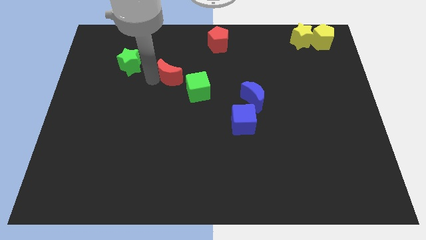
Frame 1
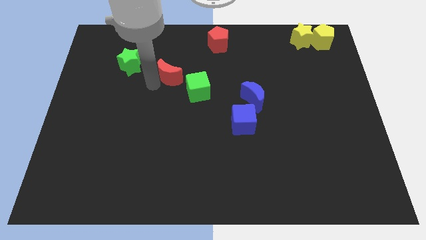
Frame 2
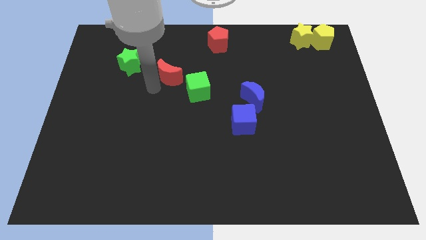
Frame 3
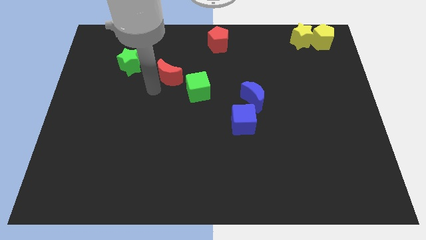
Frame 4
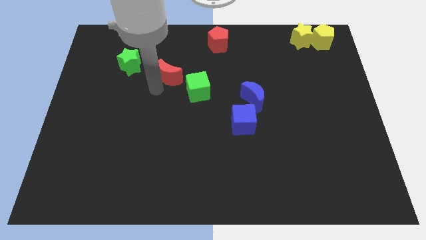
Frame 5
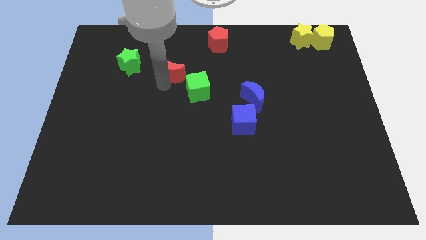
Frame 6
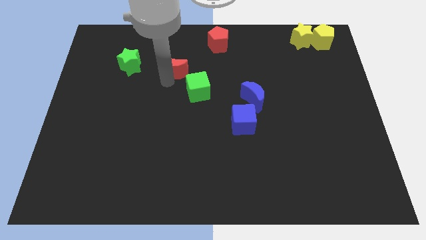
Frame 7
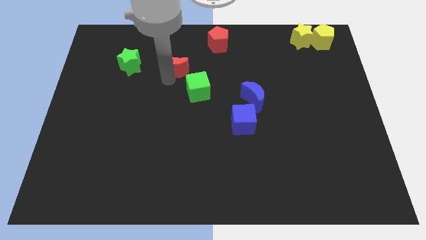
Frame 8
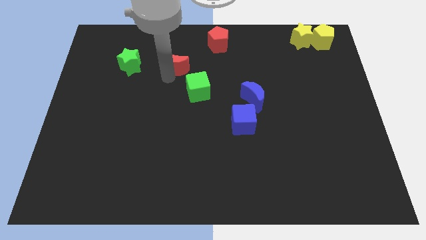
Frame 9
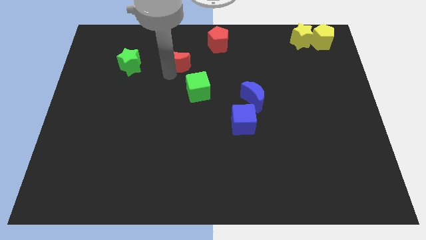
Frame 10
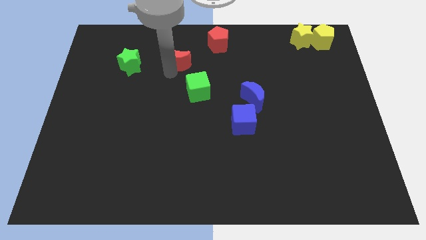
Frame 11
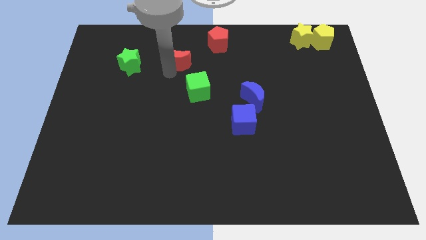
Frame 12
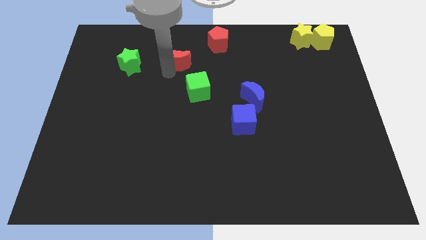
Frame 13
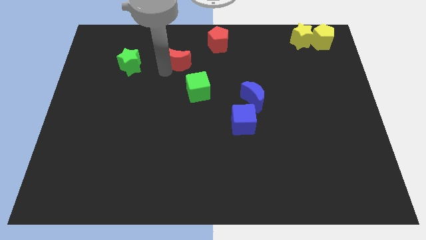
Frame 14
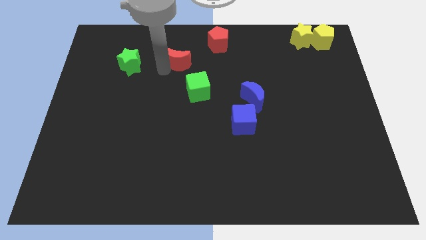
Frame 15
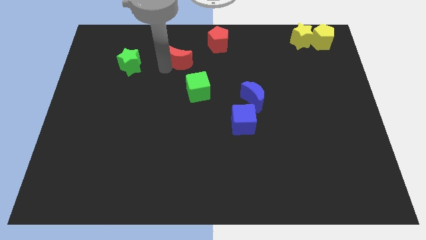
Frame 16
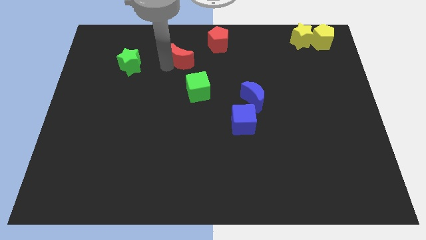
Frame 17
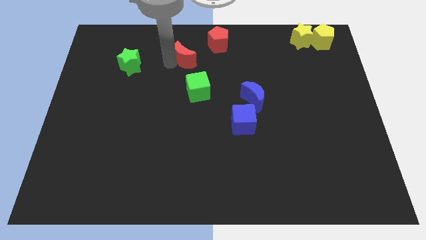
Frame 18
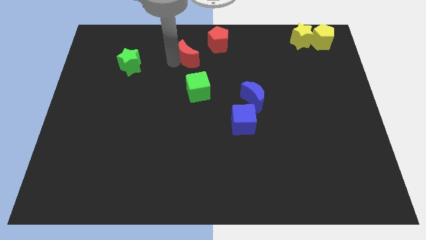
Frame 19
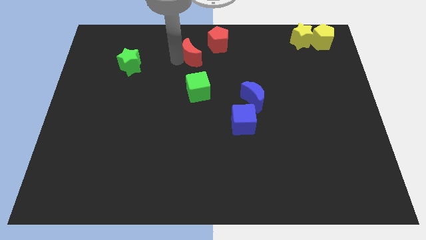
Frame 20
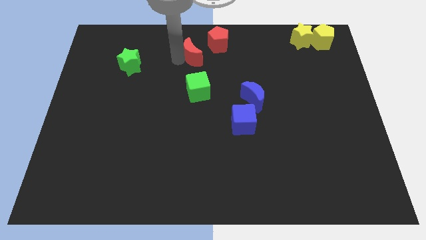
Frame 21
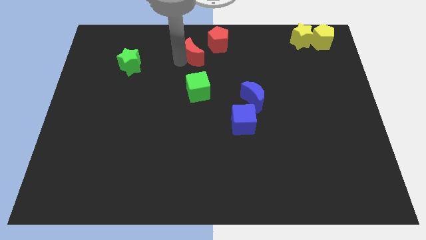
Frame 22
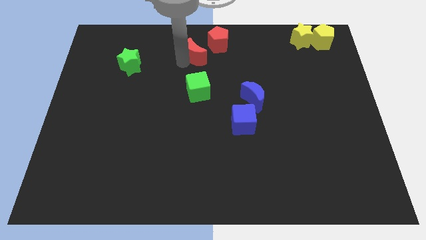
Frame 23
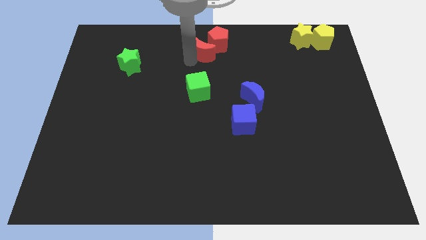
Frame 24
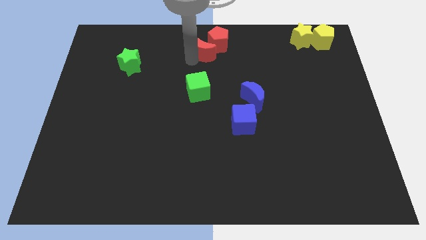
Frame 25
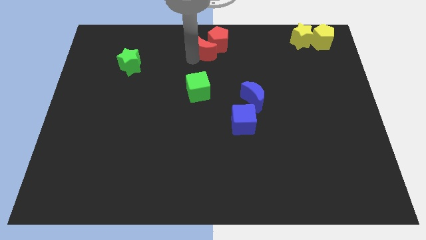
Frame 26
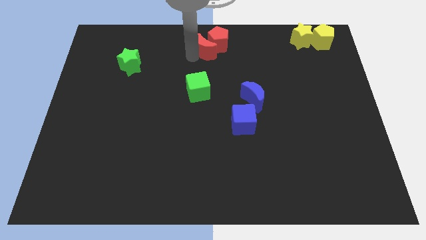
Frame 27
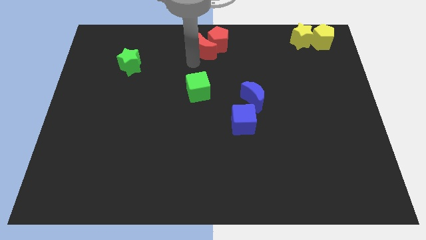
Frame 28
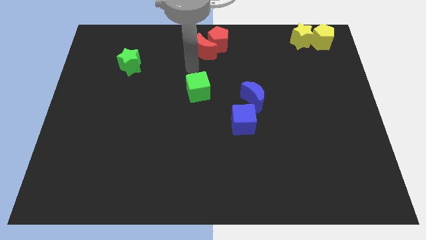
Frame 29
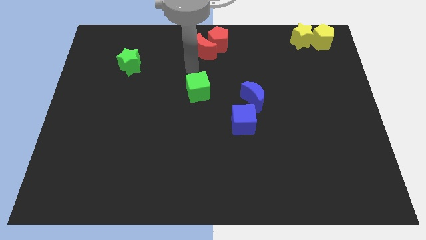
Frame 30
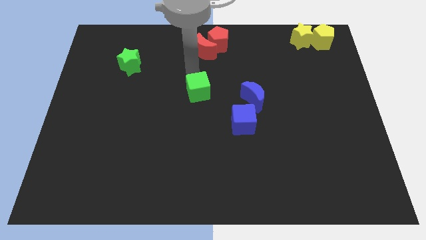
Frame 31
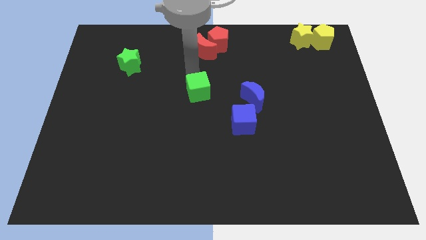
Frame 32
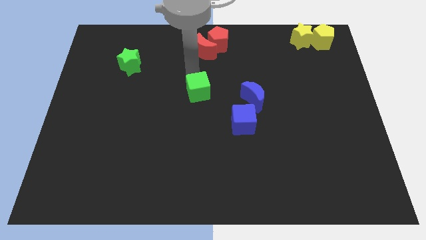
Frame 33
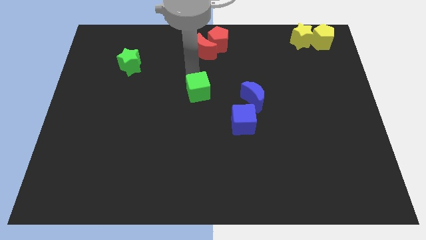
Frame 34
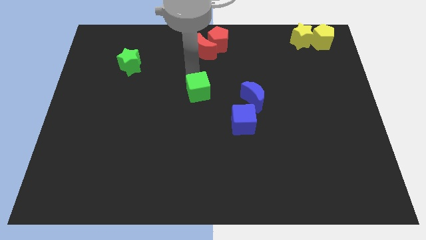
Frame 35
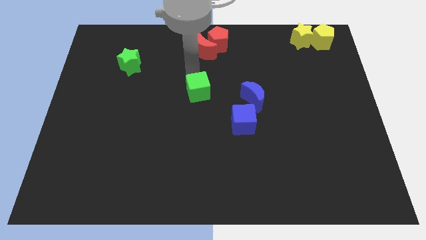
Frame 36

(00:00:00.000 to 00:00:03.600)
push the red moon to the left side of the red pentagon

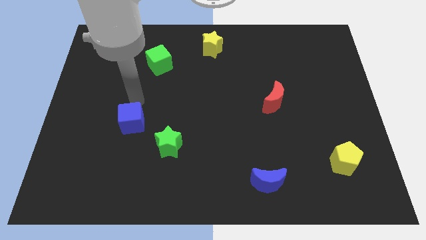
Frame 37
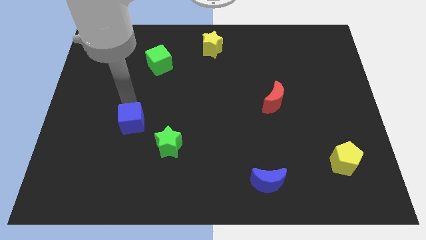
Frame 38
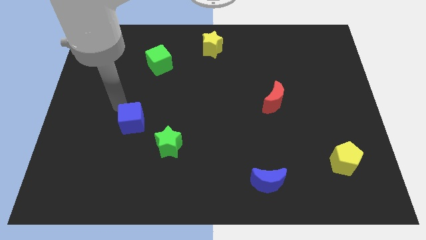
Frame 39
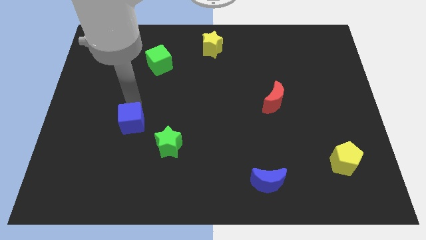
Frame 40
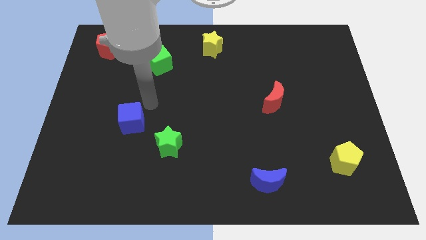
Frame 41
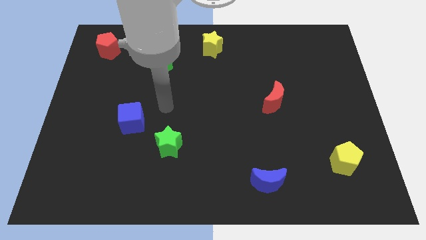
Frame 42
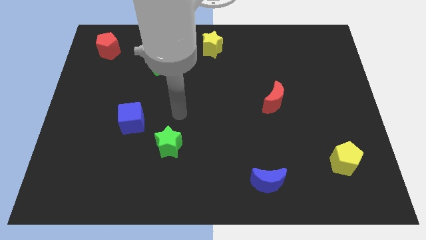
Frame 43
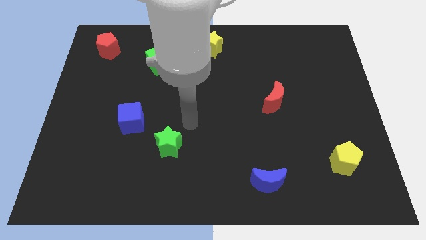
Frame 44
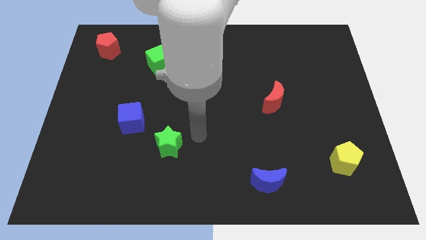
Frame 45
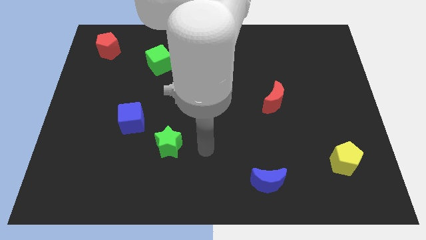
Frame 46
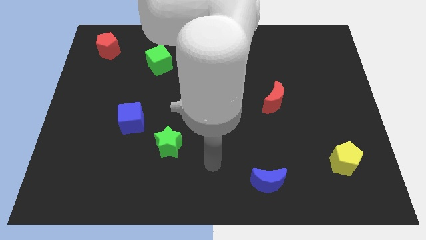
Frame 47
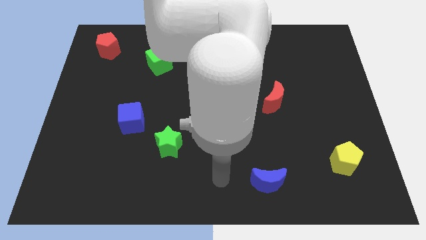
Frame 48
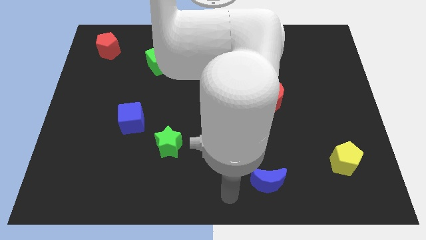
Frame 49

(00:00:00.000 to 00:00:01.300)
move the arm away from the blue cube

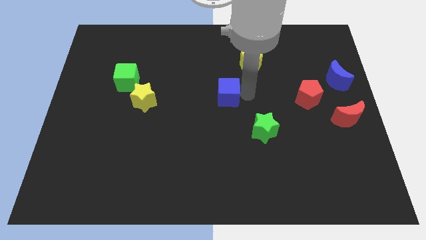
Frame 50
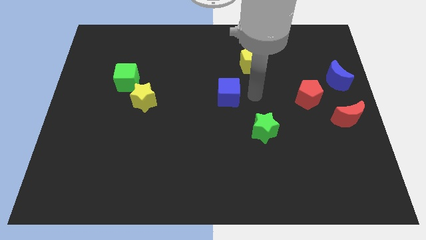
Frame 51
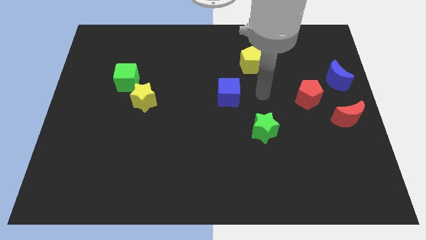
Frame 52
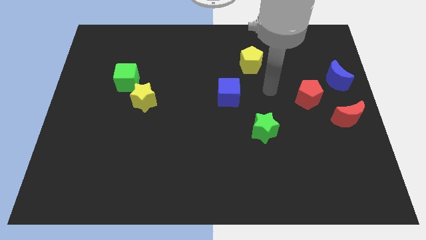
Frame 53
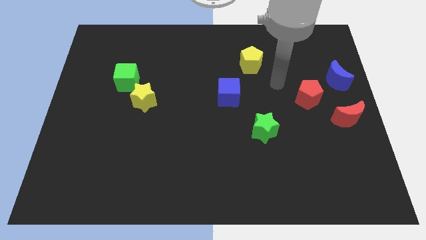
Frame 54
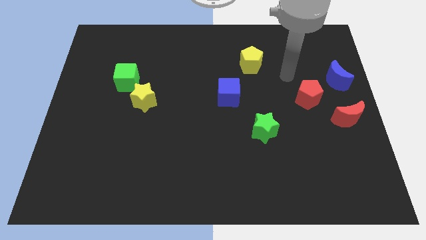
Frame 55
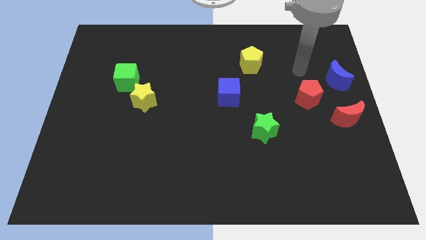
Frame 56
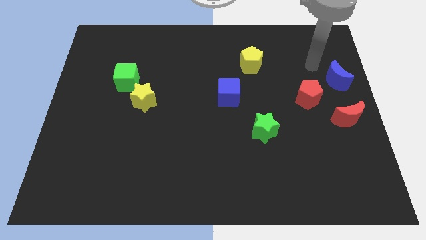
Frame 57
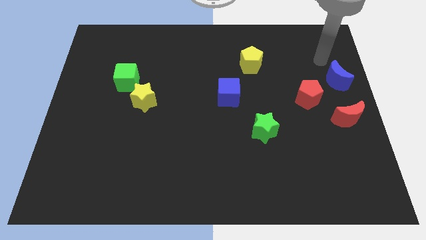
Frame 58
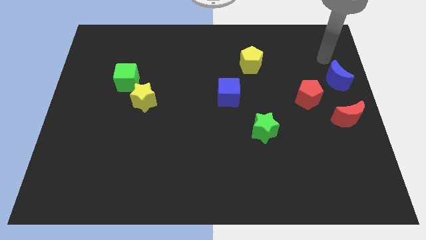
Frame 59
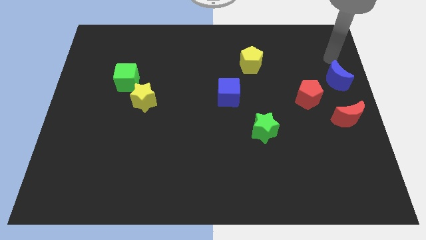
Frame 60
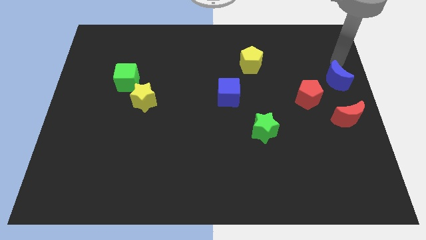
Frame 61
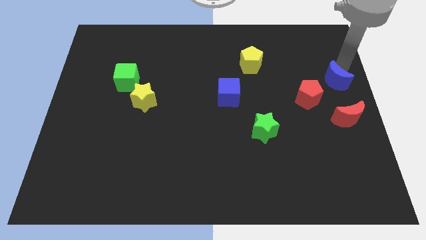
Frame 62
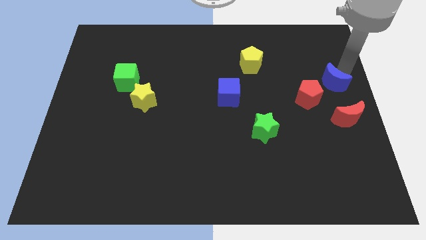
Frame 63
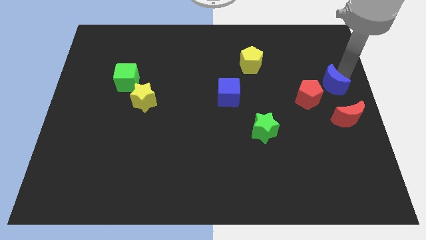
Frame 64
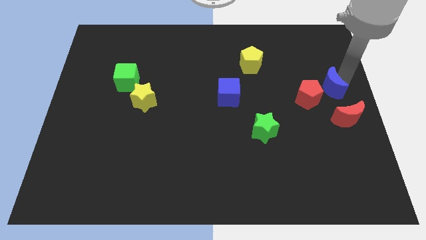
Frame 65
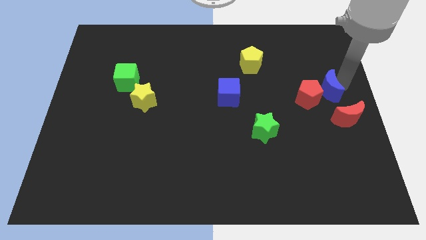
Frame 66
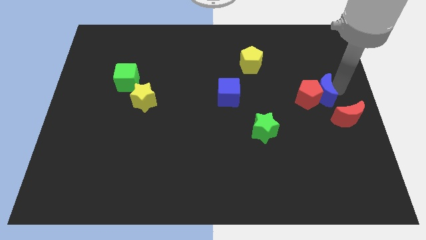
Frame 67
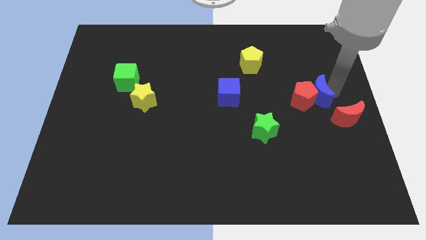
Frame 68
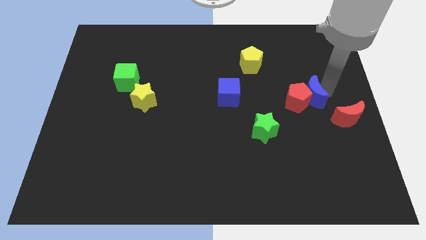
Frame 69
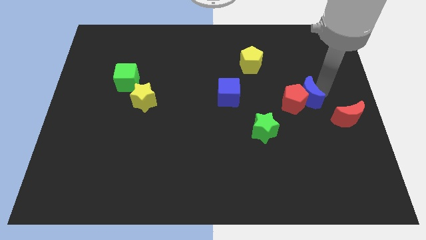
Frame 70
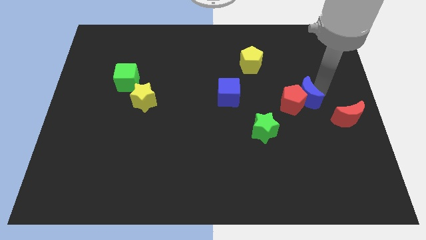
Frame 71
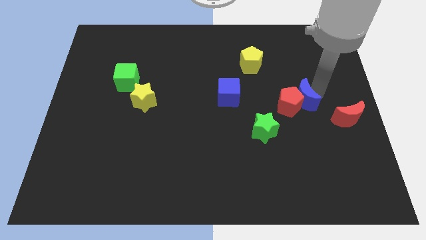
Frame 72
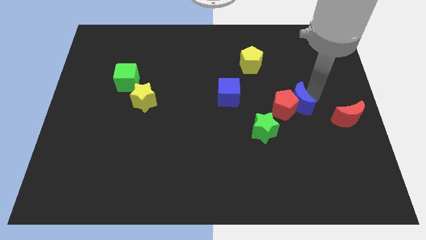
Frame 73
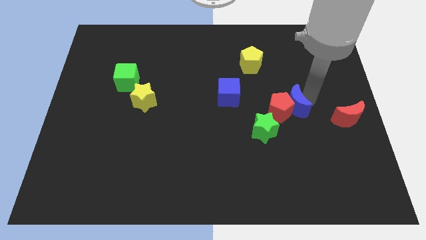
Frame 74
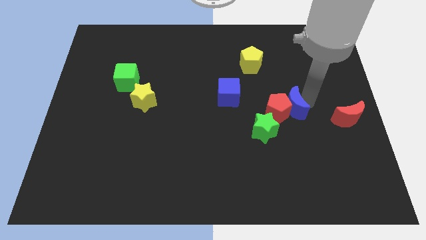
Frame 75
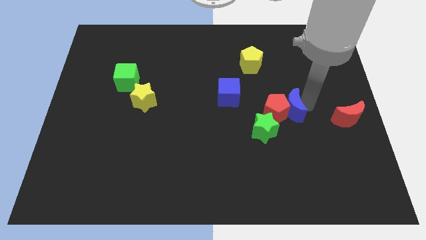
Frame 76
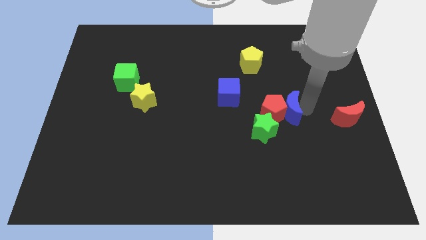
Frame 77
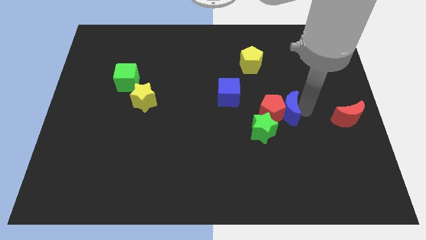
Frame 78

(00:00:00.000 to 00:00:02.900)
push the blue crescent and red pentagon towards the green star

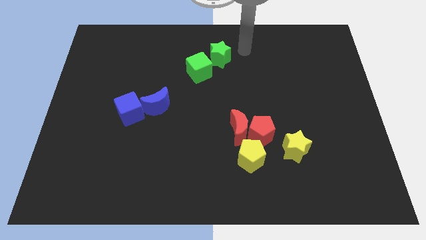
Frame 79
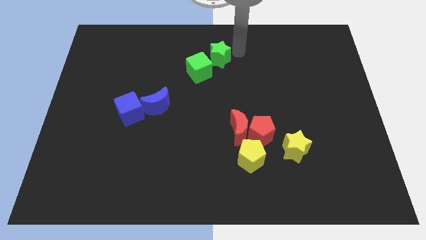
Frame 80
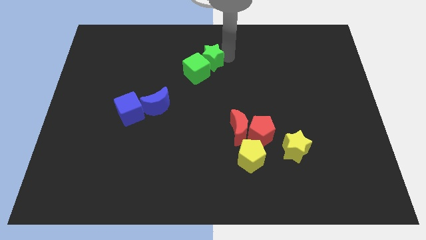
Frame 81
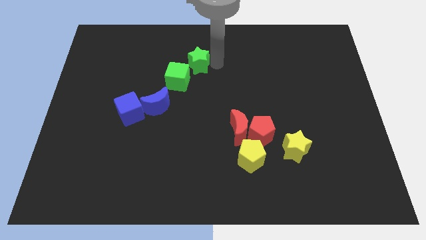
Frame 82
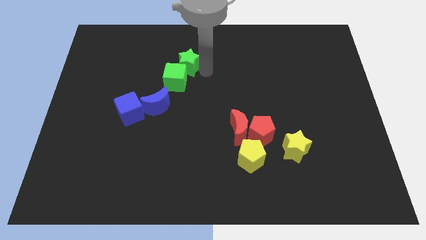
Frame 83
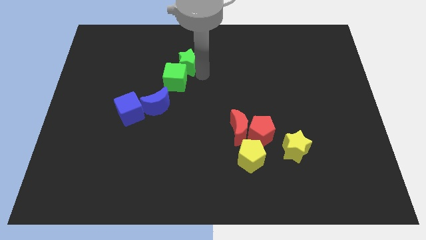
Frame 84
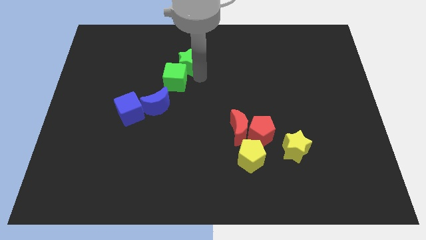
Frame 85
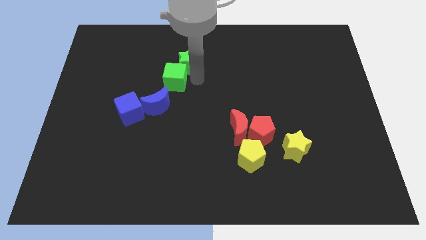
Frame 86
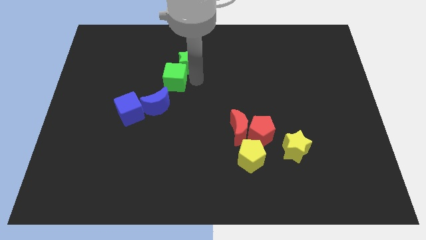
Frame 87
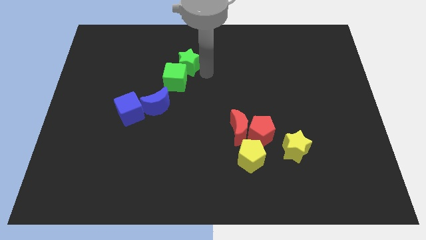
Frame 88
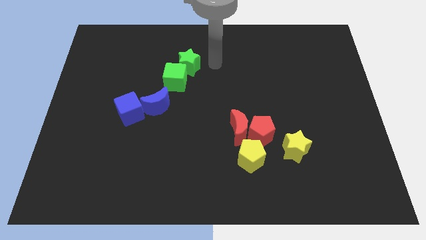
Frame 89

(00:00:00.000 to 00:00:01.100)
push two green blocks close to the blue blocks

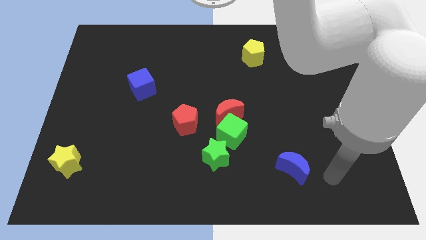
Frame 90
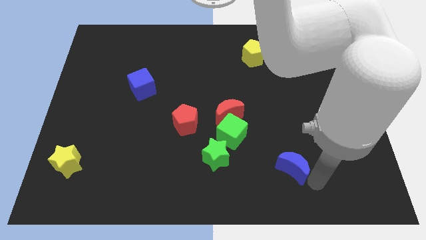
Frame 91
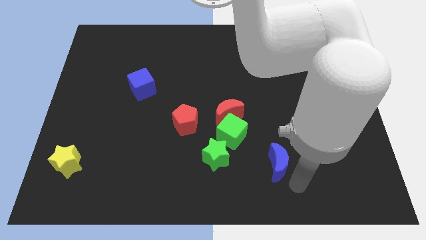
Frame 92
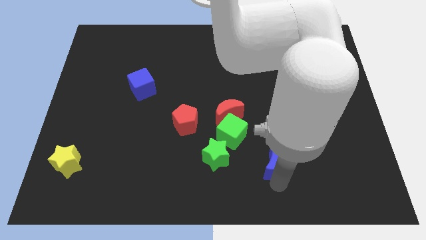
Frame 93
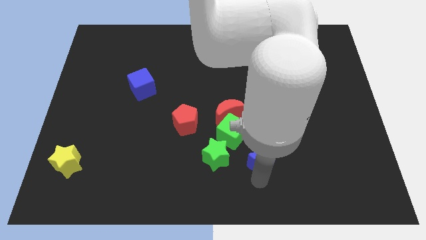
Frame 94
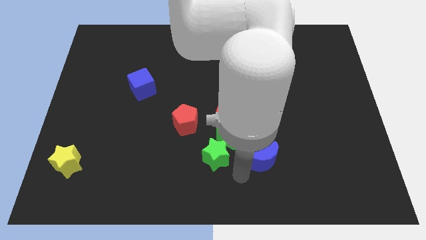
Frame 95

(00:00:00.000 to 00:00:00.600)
push blue crescent towards green cube
